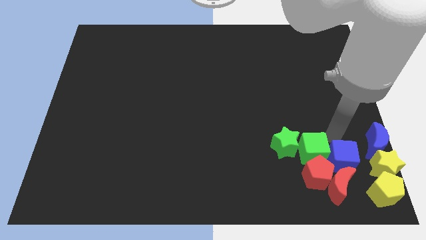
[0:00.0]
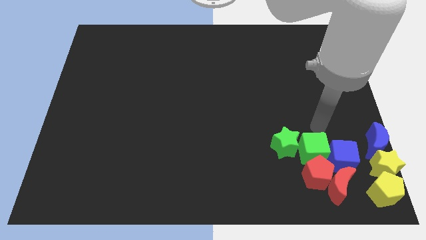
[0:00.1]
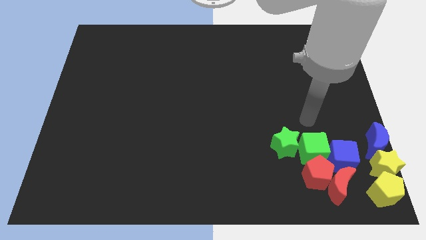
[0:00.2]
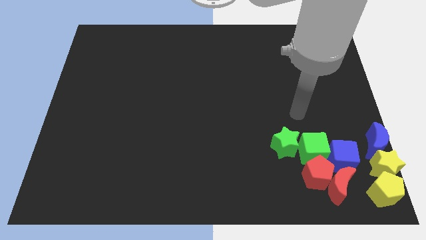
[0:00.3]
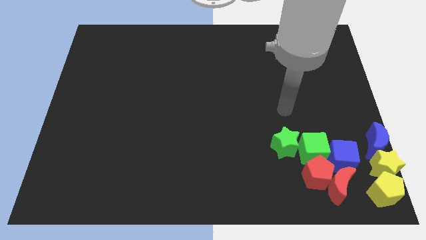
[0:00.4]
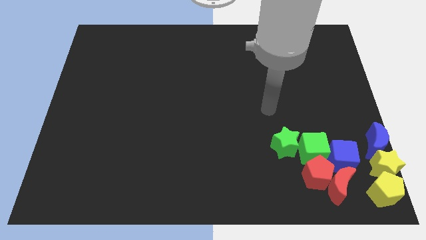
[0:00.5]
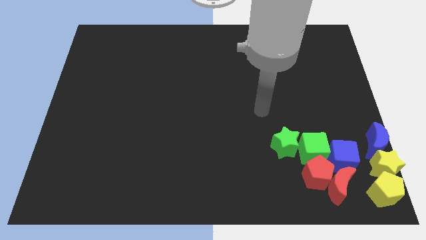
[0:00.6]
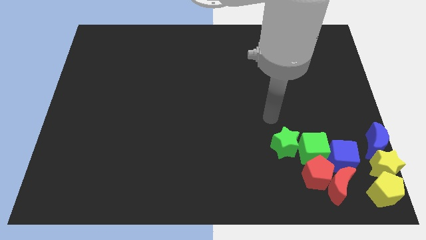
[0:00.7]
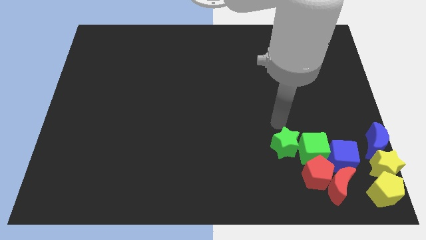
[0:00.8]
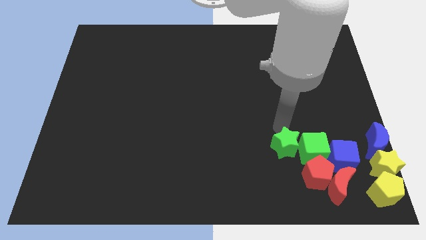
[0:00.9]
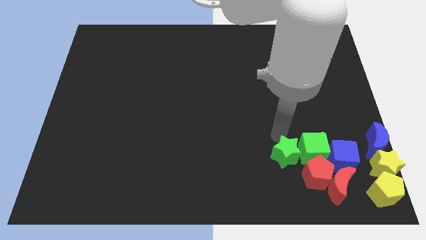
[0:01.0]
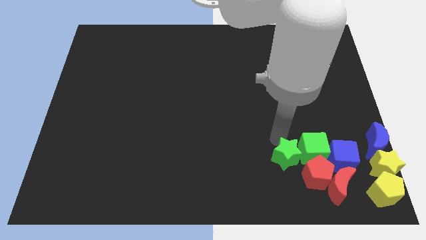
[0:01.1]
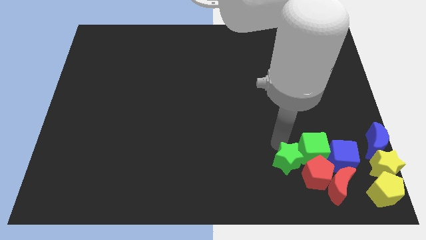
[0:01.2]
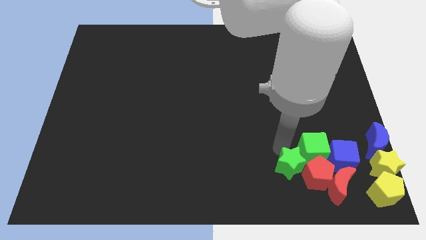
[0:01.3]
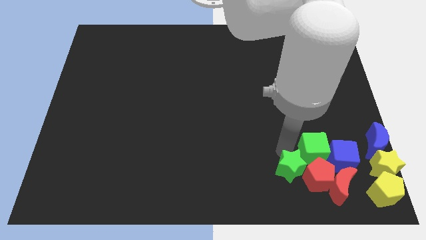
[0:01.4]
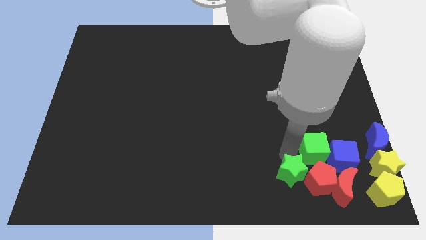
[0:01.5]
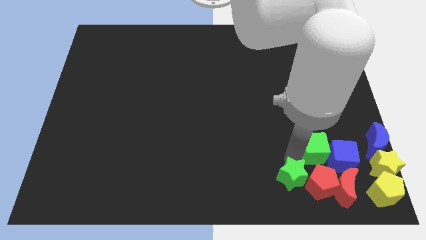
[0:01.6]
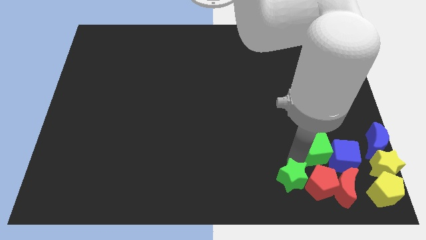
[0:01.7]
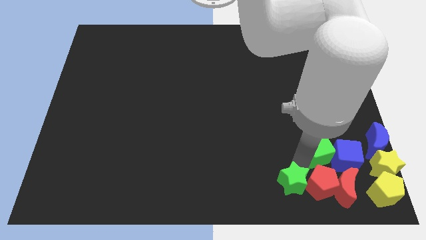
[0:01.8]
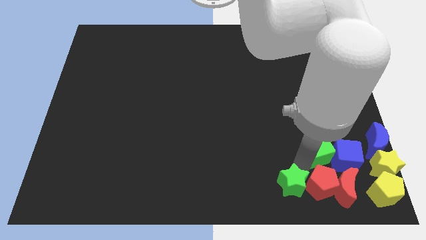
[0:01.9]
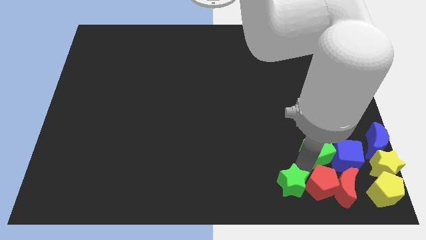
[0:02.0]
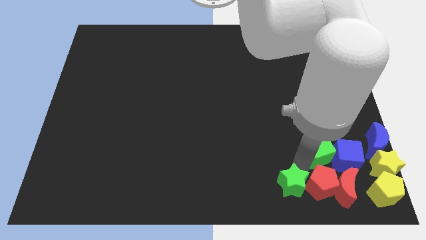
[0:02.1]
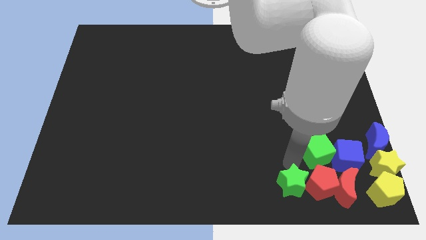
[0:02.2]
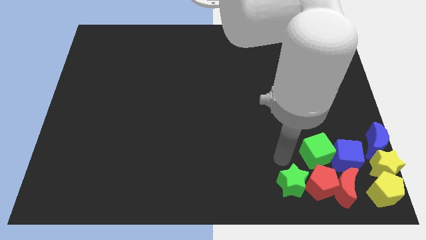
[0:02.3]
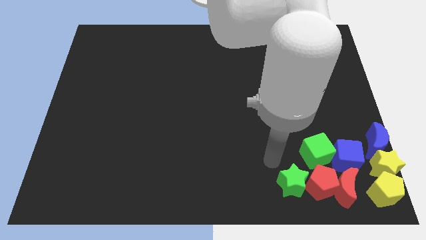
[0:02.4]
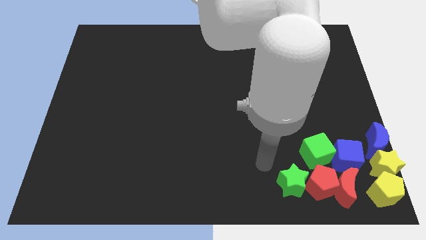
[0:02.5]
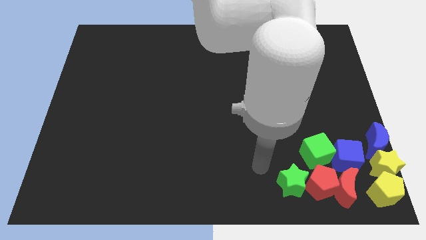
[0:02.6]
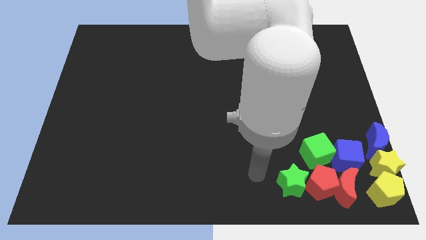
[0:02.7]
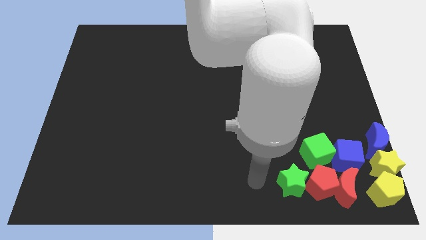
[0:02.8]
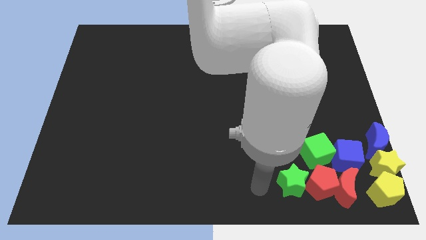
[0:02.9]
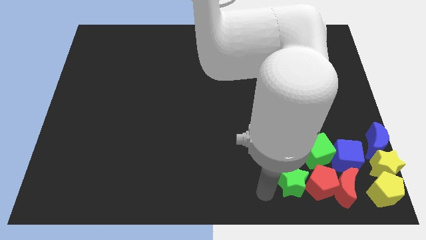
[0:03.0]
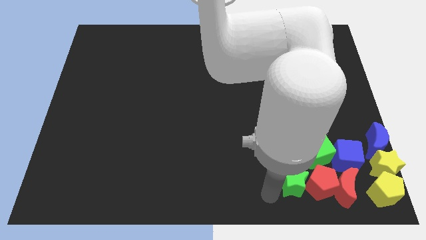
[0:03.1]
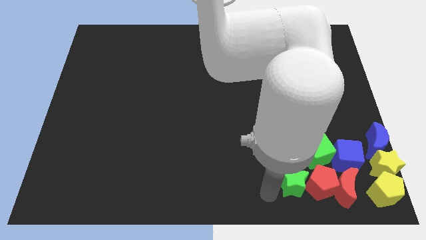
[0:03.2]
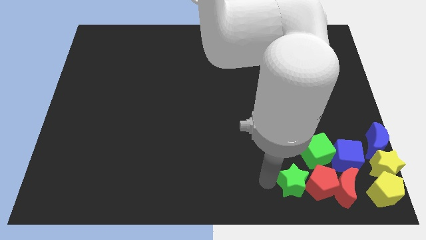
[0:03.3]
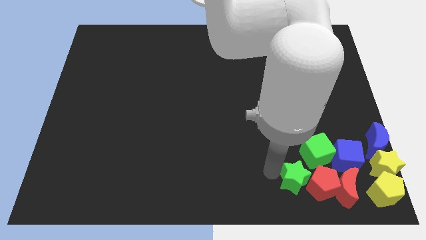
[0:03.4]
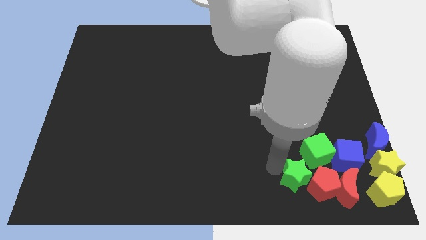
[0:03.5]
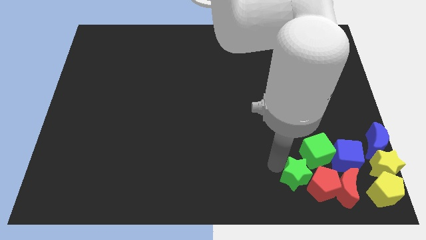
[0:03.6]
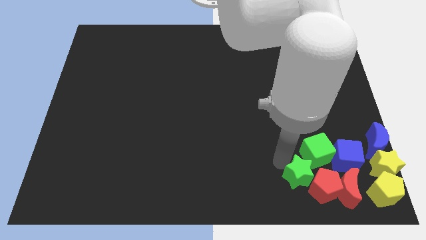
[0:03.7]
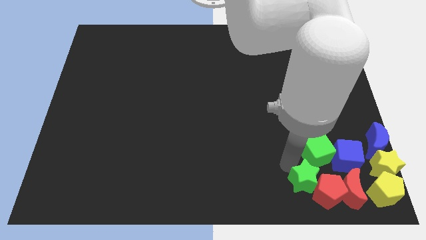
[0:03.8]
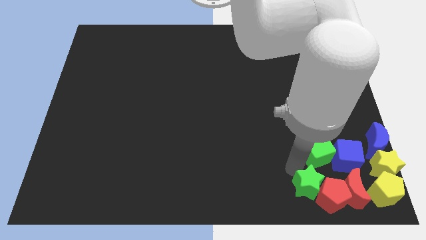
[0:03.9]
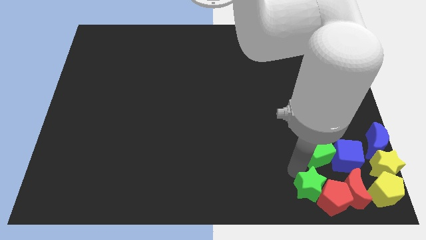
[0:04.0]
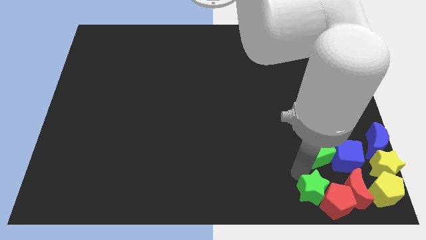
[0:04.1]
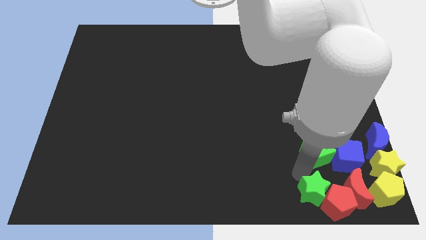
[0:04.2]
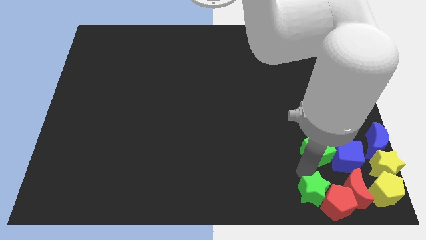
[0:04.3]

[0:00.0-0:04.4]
adjust the green star into the group along with the green cube

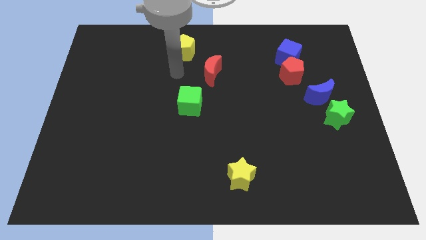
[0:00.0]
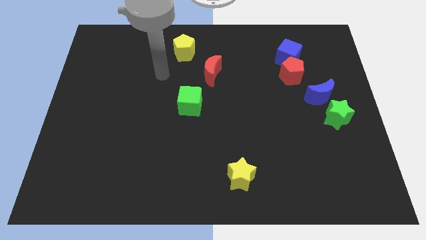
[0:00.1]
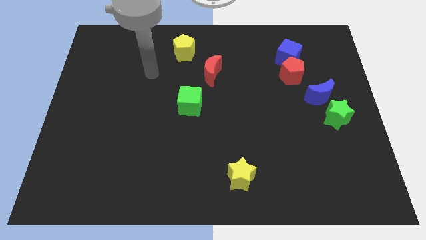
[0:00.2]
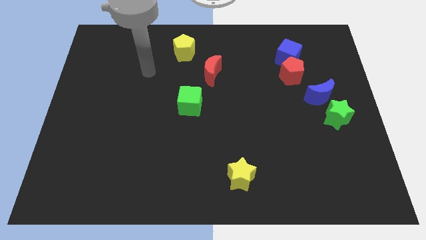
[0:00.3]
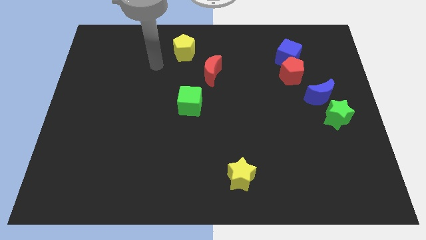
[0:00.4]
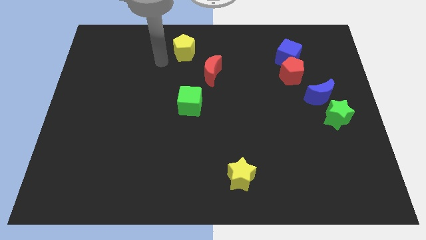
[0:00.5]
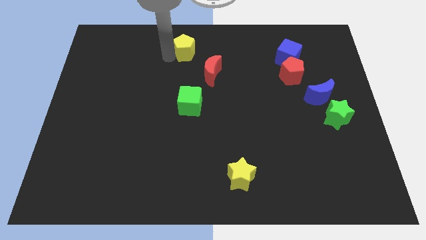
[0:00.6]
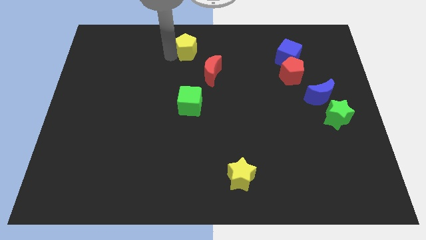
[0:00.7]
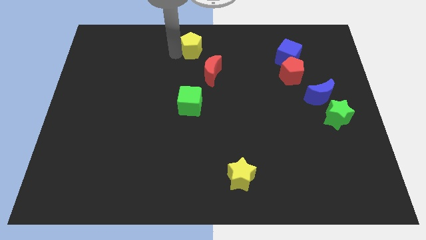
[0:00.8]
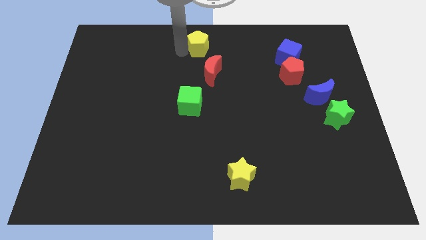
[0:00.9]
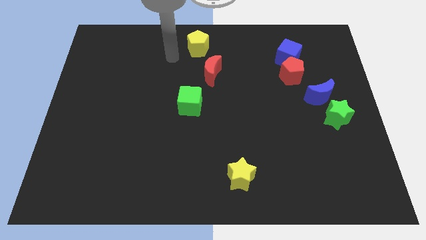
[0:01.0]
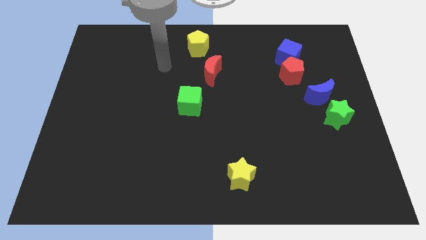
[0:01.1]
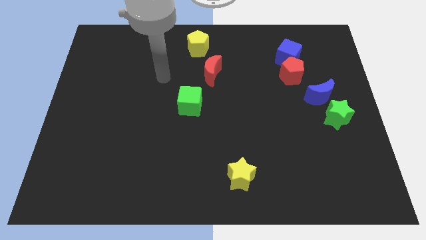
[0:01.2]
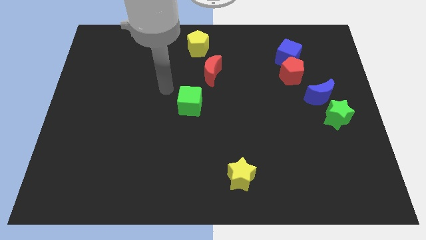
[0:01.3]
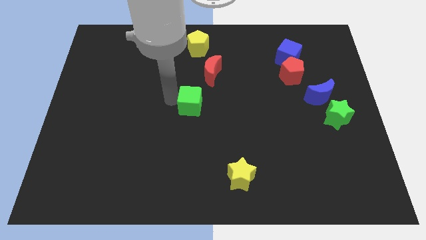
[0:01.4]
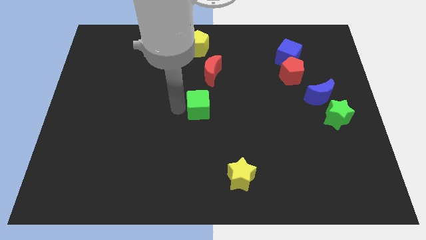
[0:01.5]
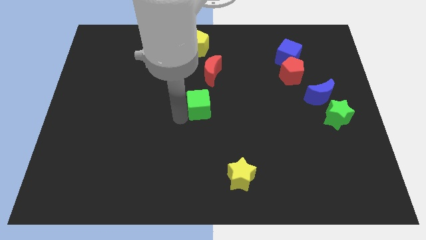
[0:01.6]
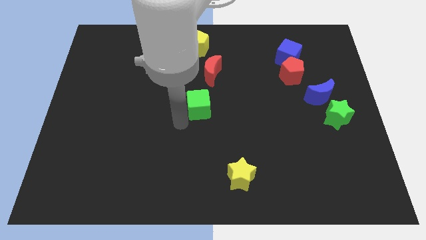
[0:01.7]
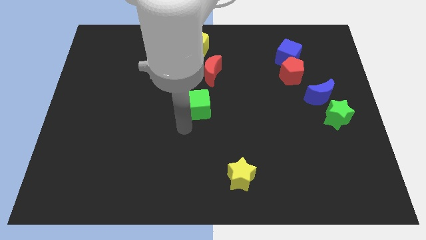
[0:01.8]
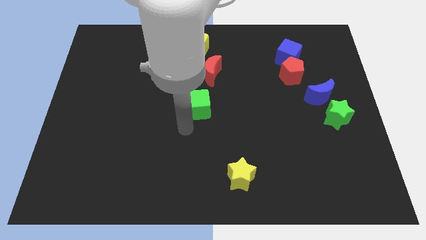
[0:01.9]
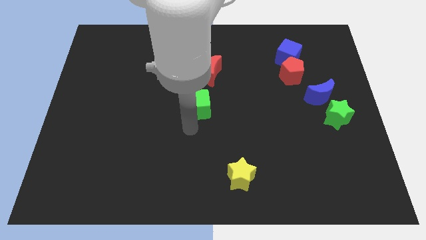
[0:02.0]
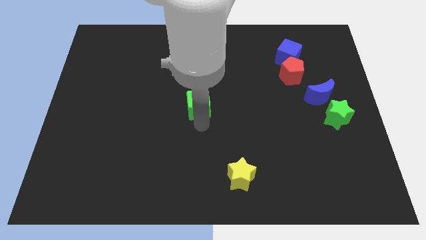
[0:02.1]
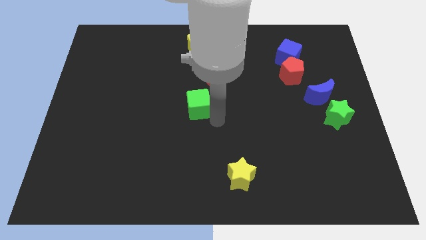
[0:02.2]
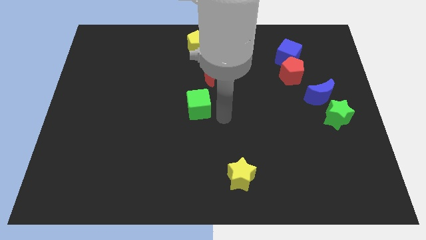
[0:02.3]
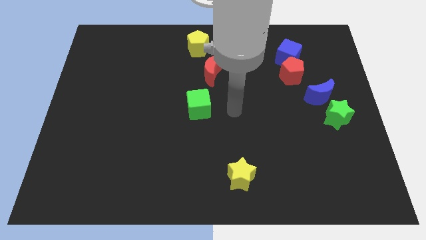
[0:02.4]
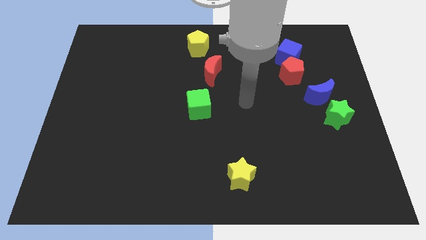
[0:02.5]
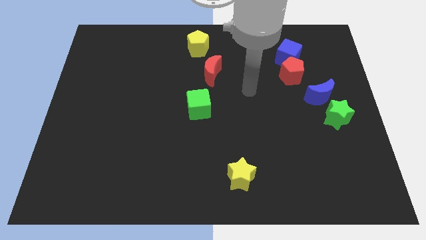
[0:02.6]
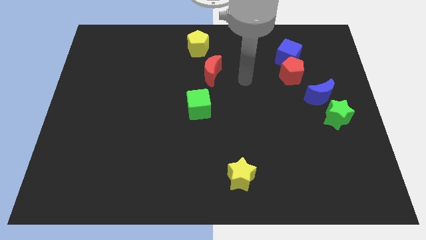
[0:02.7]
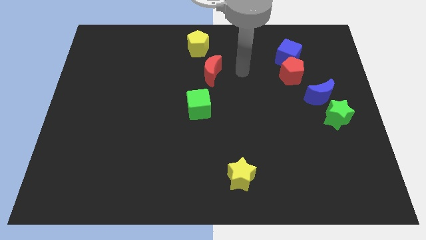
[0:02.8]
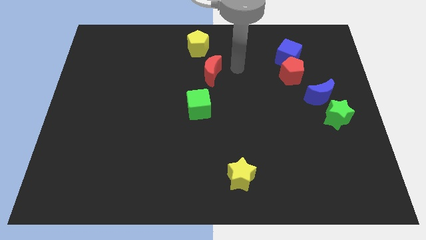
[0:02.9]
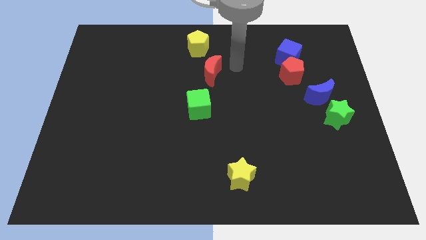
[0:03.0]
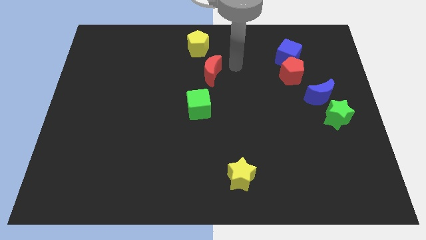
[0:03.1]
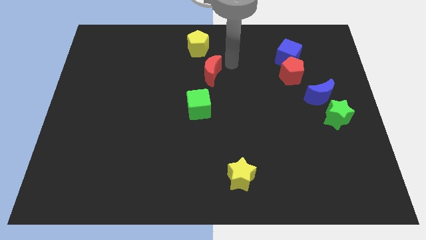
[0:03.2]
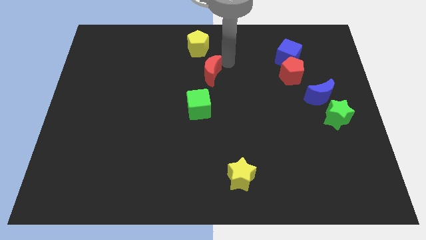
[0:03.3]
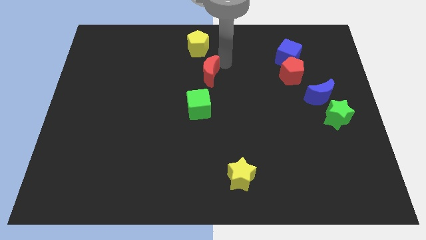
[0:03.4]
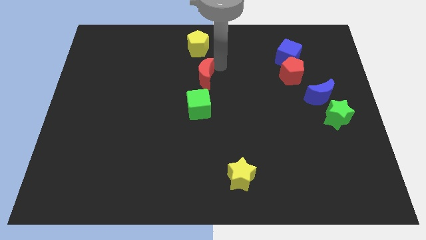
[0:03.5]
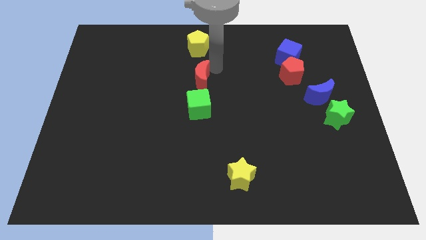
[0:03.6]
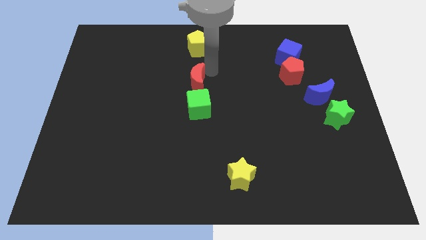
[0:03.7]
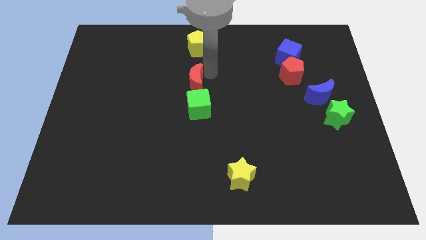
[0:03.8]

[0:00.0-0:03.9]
move the yellow pentagon towards the top center and red crescent towards left

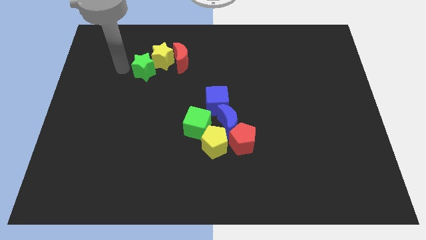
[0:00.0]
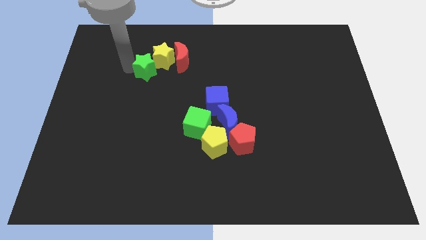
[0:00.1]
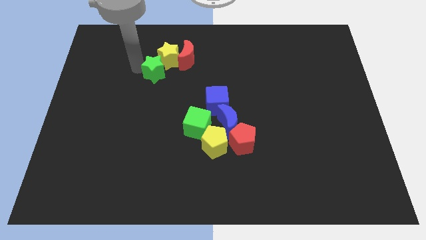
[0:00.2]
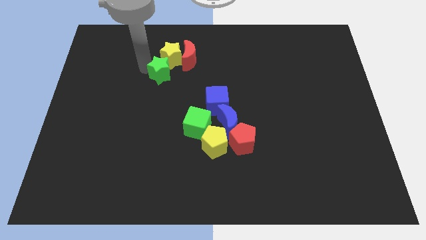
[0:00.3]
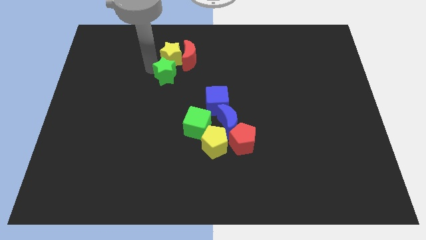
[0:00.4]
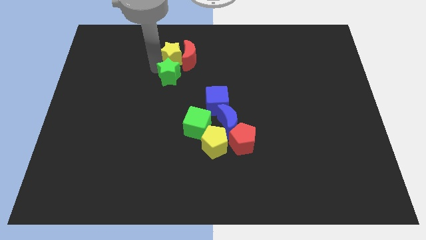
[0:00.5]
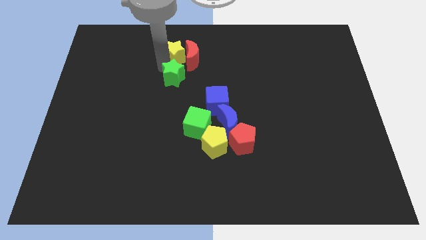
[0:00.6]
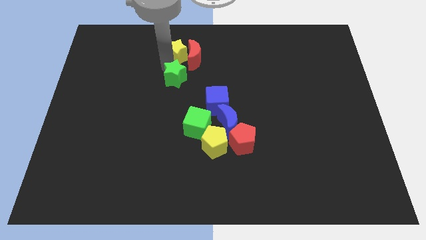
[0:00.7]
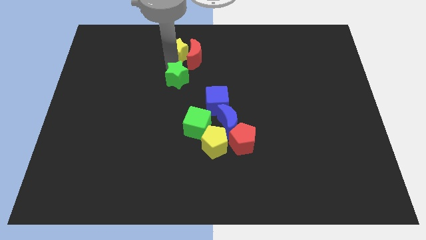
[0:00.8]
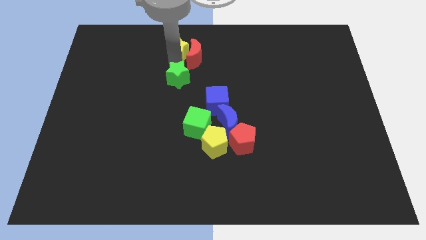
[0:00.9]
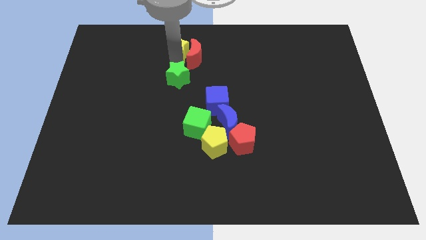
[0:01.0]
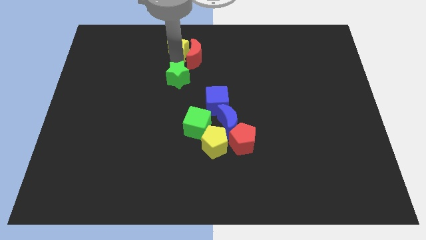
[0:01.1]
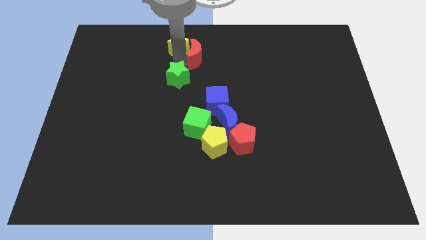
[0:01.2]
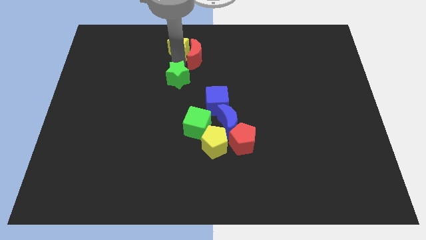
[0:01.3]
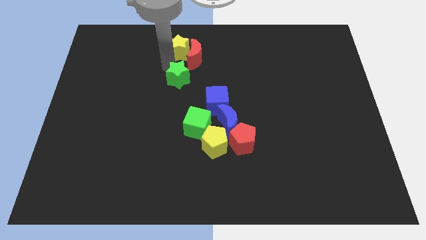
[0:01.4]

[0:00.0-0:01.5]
separate the green and yellow stars
